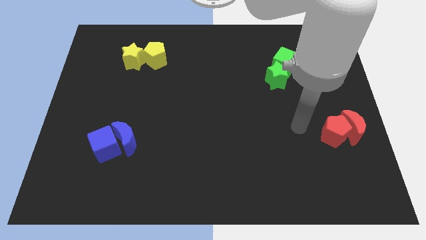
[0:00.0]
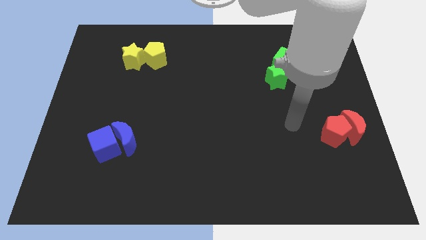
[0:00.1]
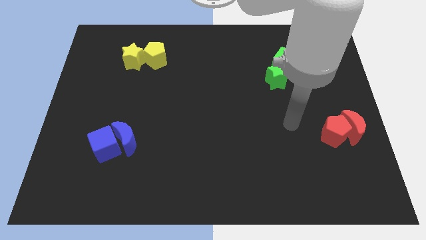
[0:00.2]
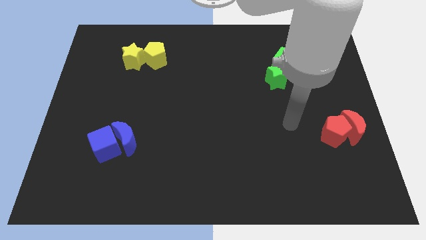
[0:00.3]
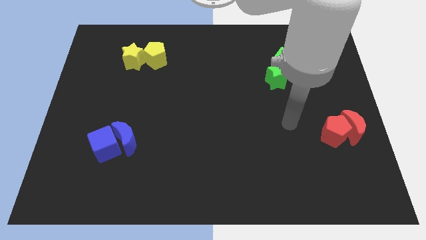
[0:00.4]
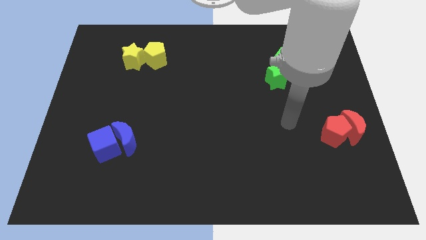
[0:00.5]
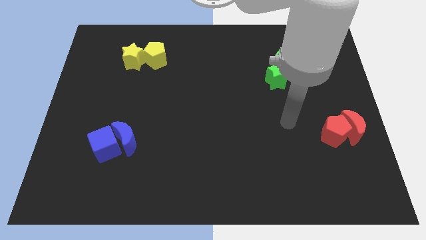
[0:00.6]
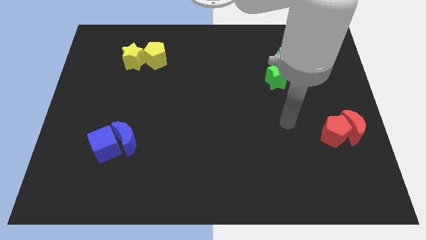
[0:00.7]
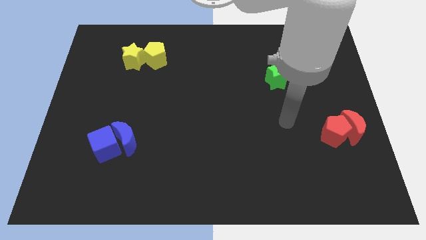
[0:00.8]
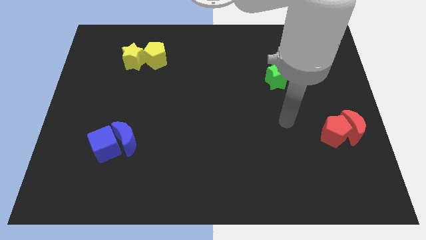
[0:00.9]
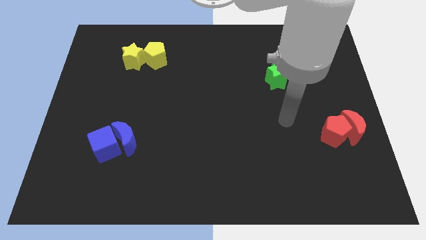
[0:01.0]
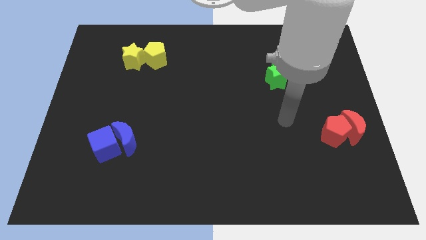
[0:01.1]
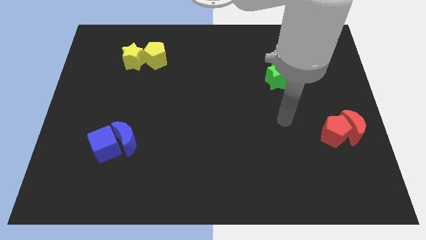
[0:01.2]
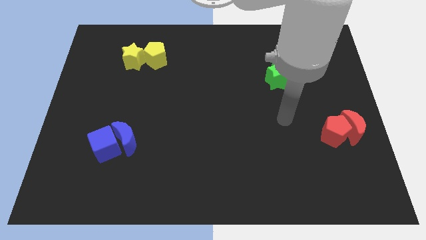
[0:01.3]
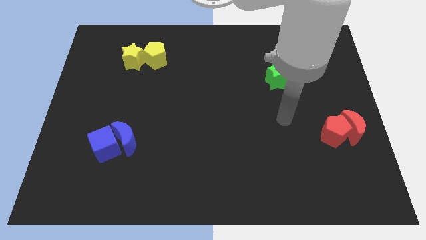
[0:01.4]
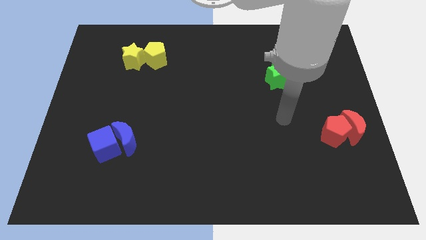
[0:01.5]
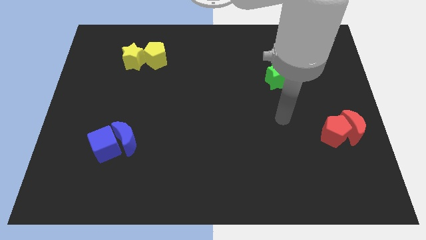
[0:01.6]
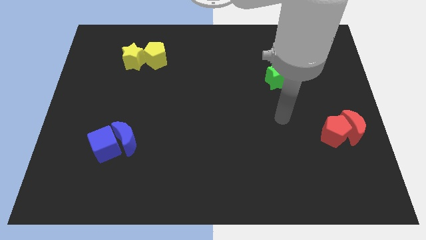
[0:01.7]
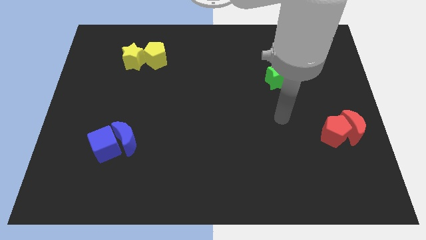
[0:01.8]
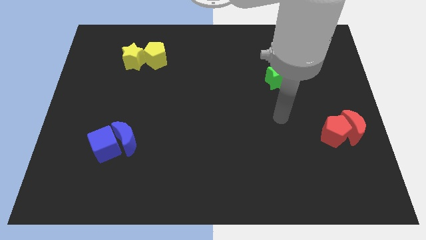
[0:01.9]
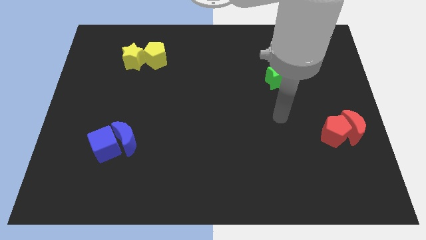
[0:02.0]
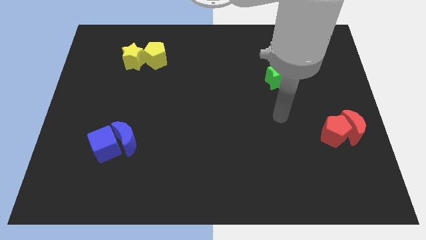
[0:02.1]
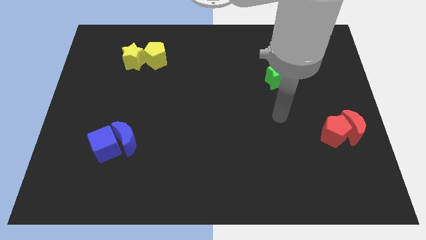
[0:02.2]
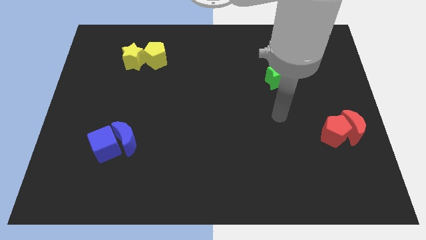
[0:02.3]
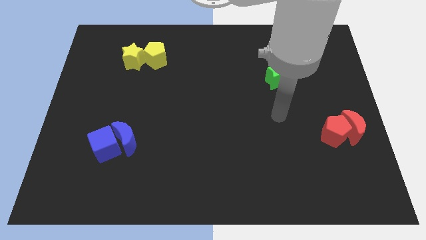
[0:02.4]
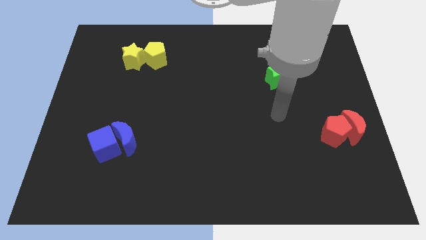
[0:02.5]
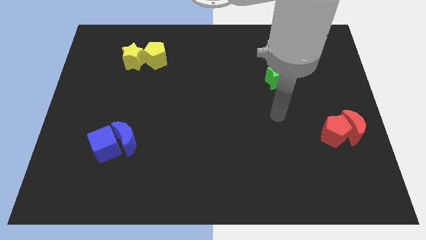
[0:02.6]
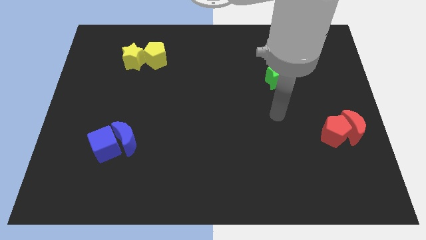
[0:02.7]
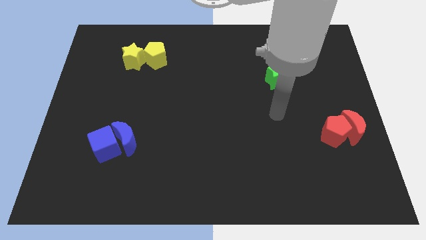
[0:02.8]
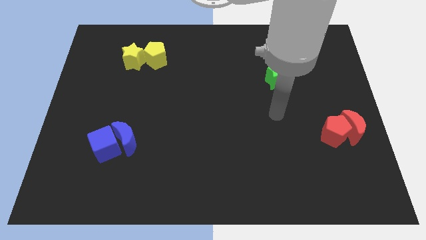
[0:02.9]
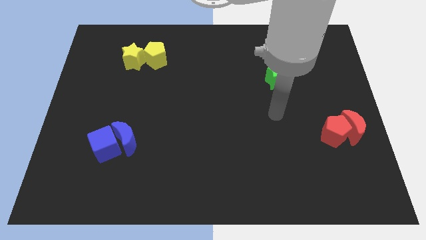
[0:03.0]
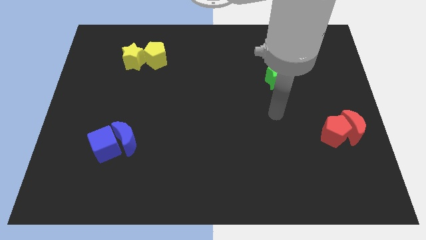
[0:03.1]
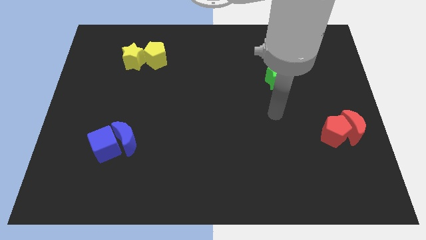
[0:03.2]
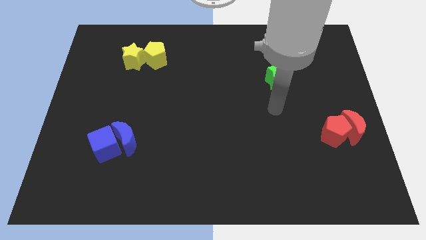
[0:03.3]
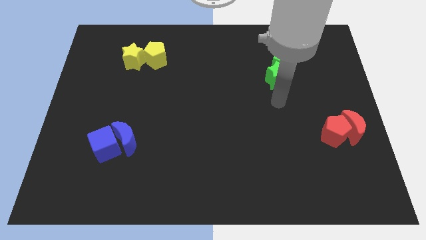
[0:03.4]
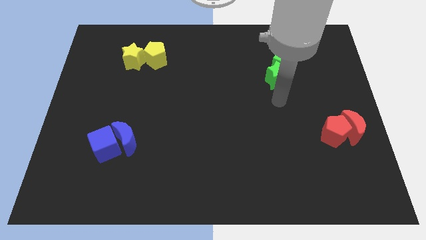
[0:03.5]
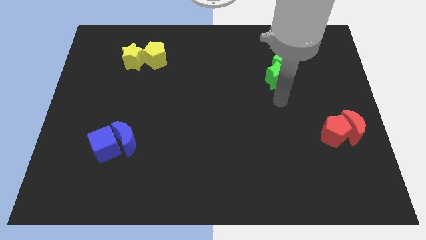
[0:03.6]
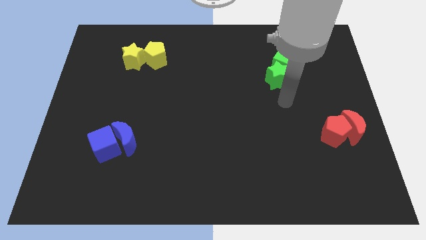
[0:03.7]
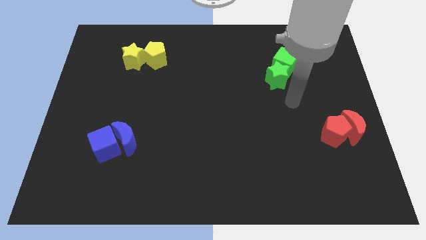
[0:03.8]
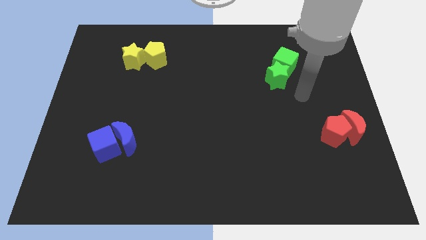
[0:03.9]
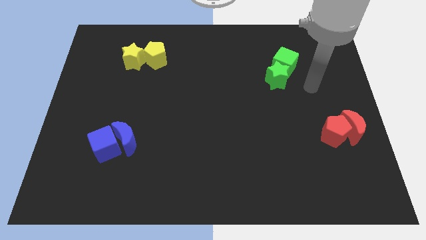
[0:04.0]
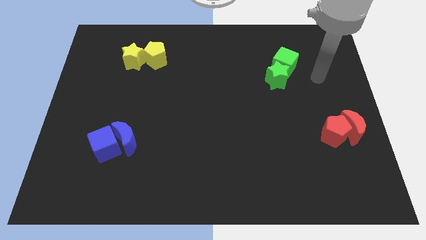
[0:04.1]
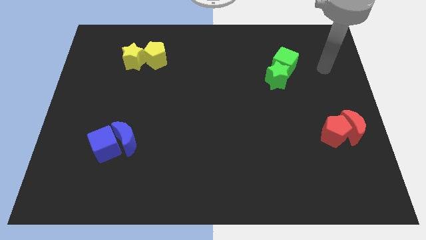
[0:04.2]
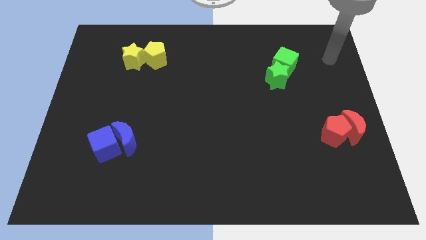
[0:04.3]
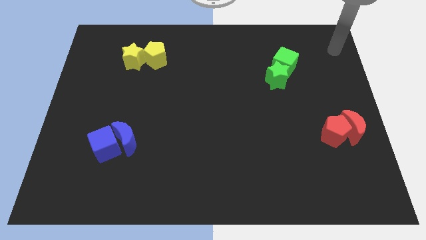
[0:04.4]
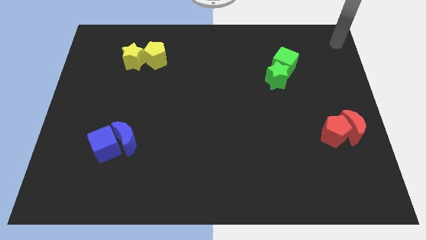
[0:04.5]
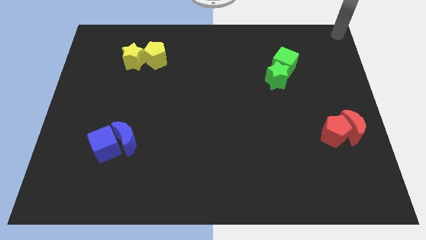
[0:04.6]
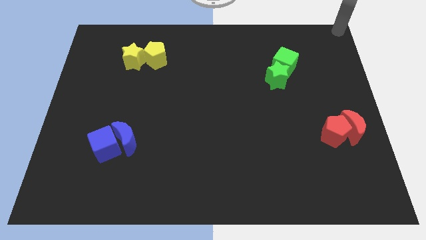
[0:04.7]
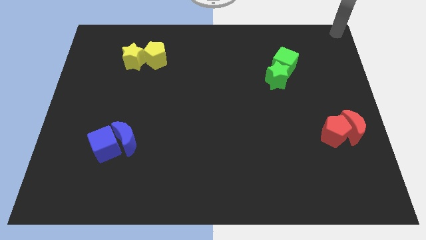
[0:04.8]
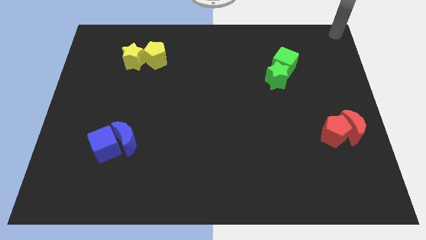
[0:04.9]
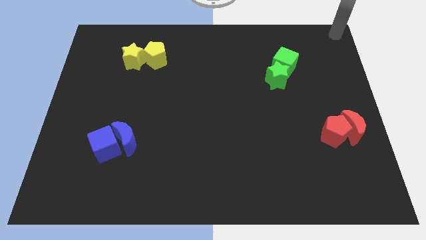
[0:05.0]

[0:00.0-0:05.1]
move your arm to the top right corner of the board

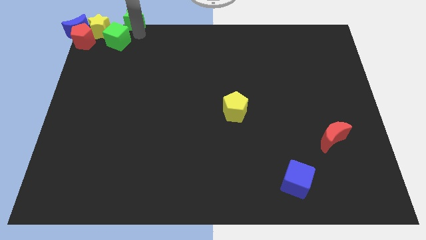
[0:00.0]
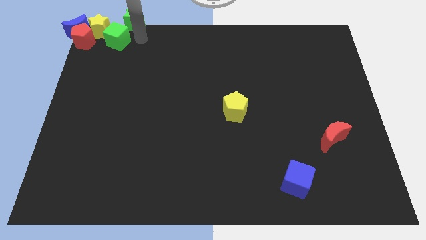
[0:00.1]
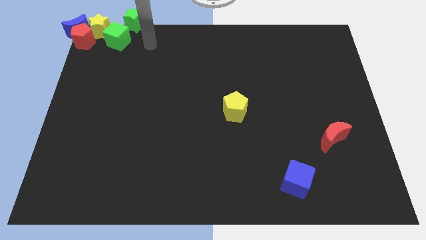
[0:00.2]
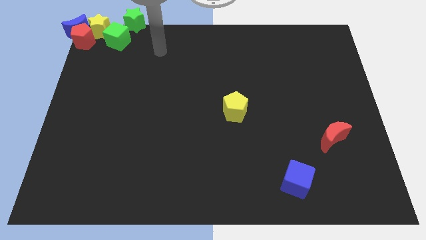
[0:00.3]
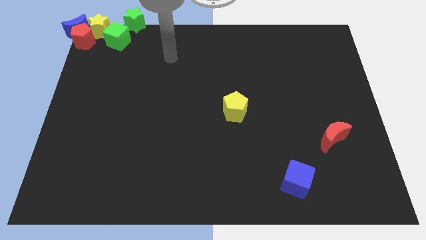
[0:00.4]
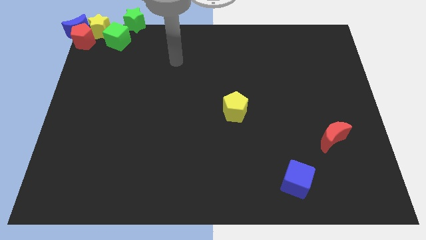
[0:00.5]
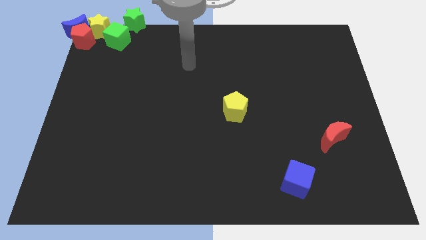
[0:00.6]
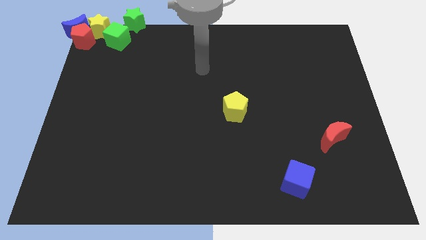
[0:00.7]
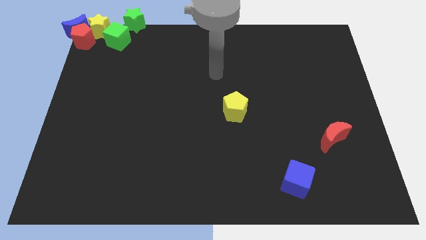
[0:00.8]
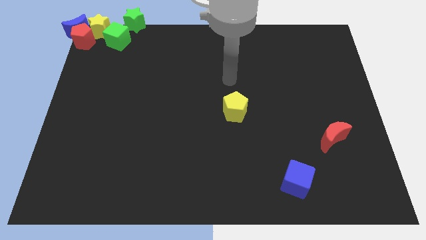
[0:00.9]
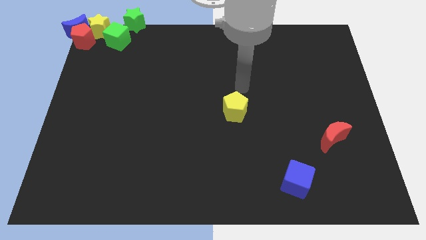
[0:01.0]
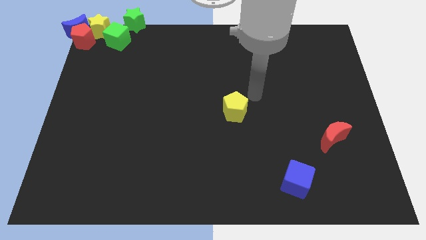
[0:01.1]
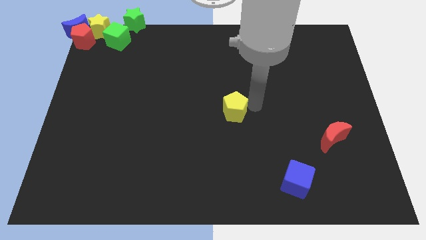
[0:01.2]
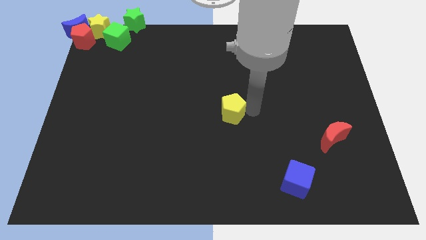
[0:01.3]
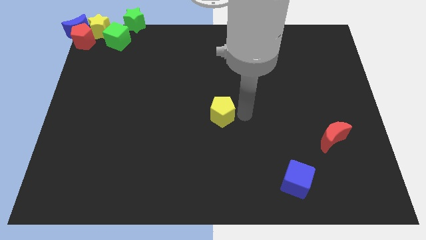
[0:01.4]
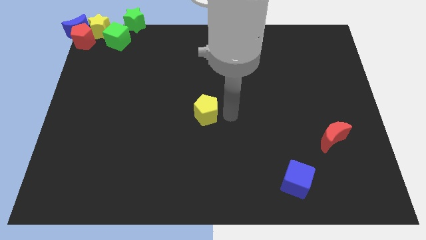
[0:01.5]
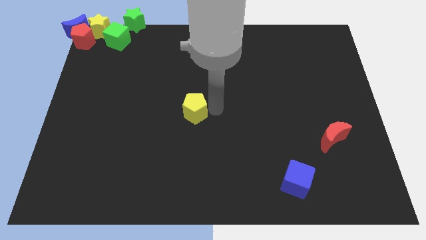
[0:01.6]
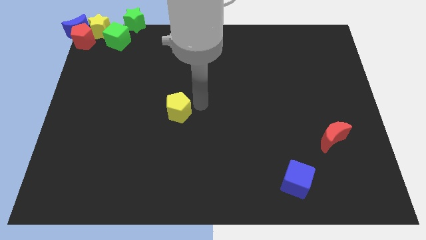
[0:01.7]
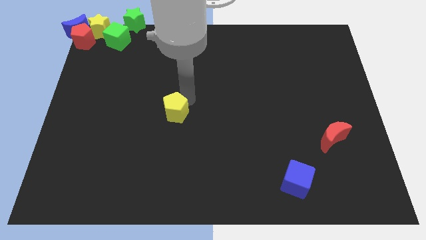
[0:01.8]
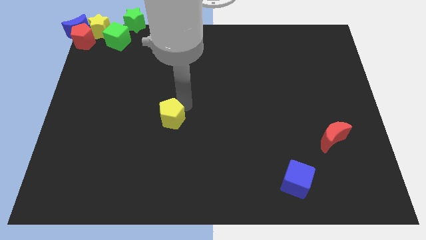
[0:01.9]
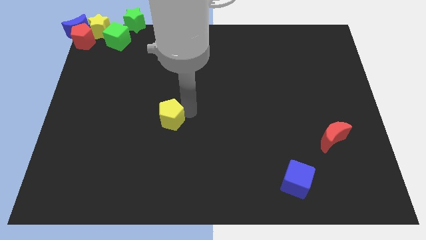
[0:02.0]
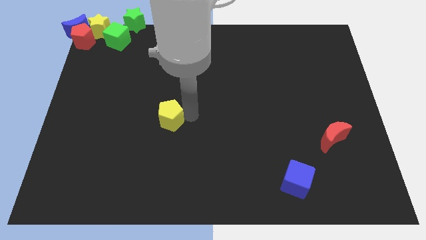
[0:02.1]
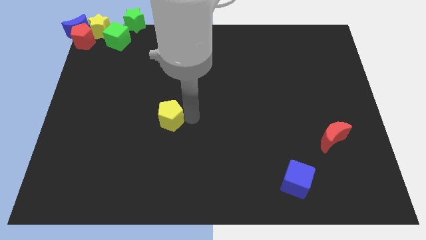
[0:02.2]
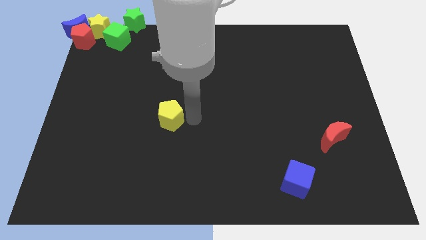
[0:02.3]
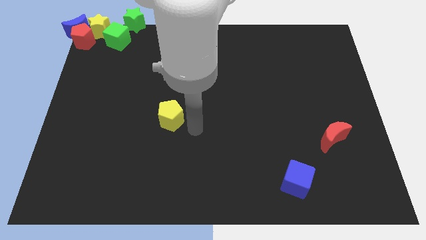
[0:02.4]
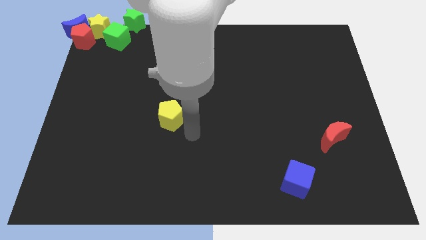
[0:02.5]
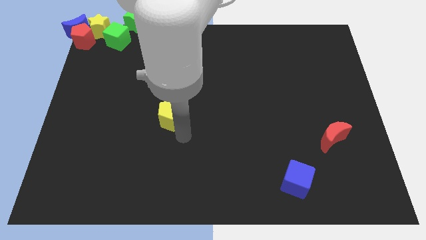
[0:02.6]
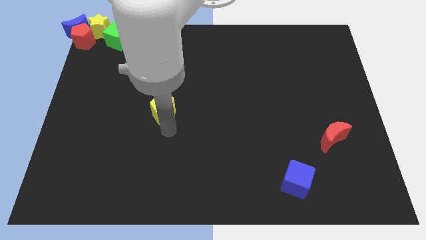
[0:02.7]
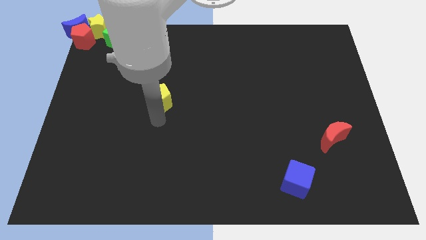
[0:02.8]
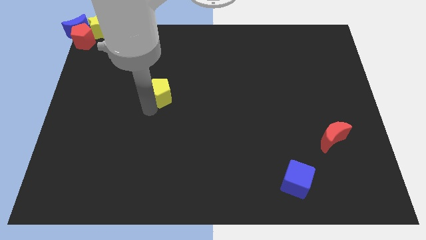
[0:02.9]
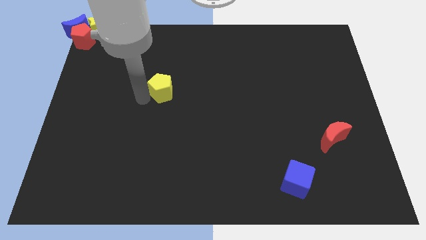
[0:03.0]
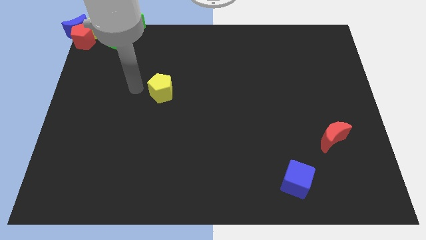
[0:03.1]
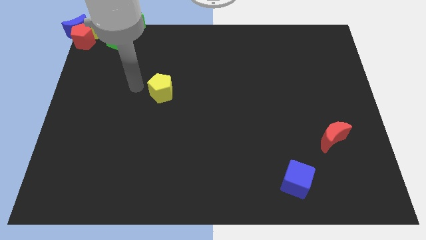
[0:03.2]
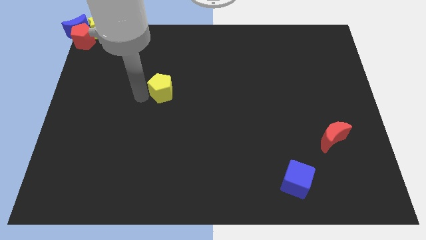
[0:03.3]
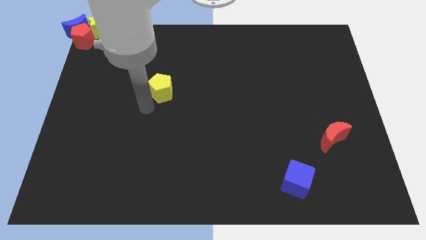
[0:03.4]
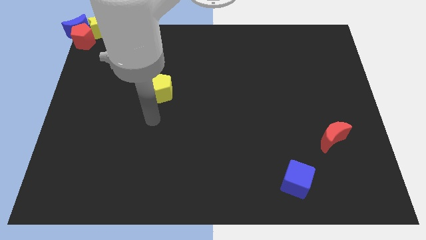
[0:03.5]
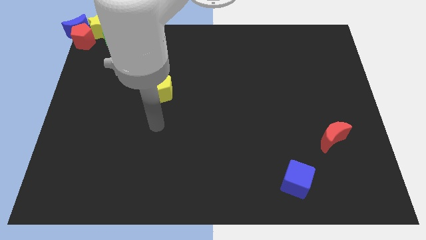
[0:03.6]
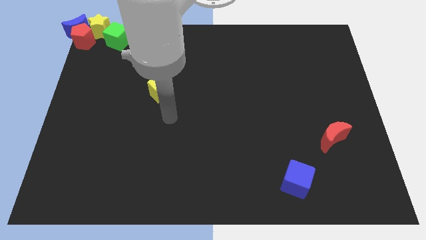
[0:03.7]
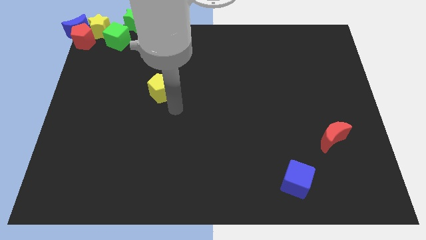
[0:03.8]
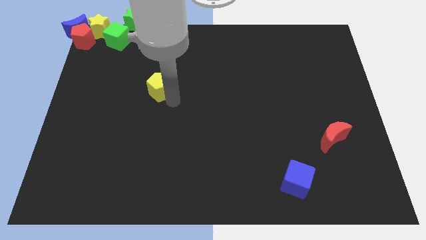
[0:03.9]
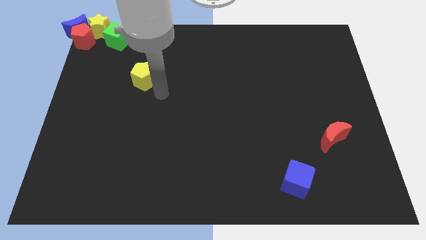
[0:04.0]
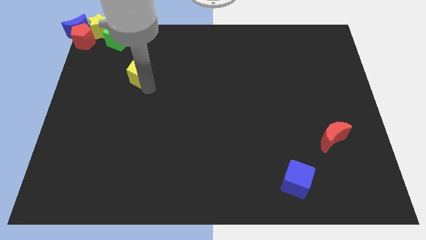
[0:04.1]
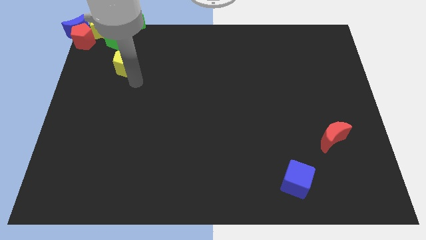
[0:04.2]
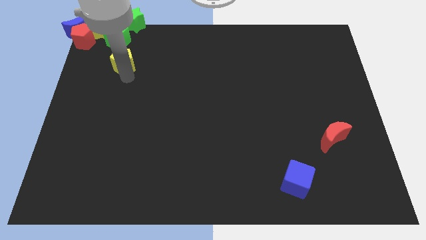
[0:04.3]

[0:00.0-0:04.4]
place the yellow pentagon diagonally to green cube
